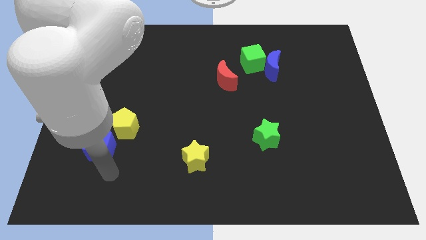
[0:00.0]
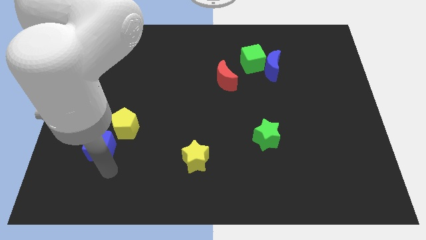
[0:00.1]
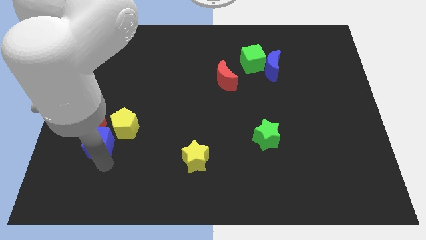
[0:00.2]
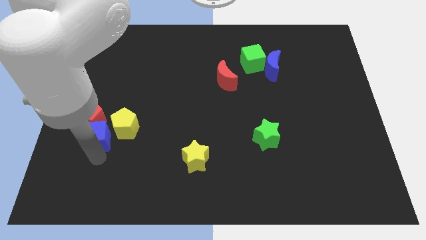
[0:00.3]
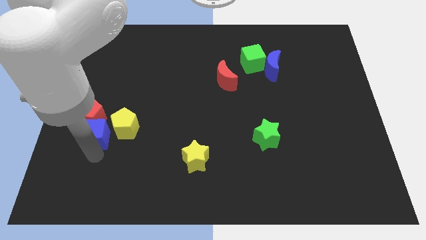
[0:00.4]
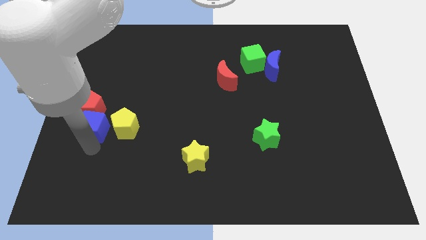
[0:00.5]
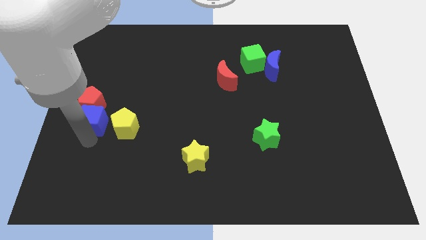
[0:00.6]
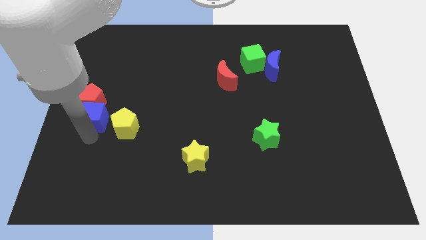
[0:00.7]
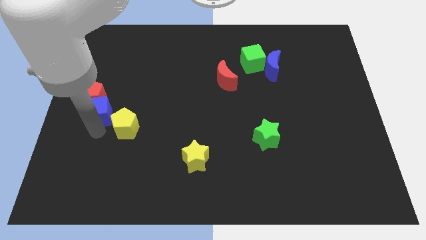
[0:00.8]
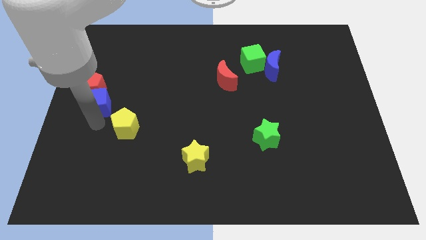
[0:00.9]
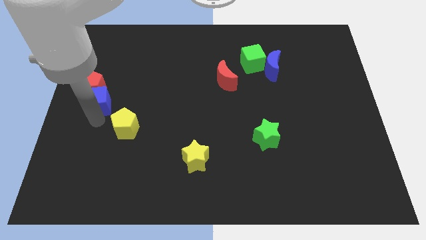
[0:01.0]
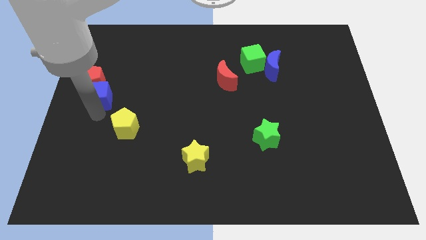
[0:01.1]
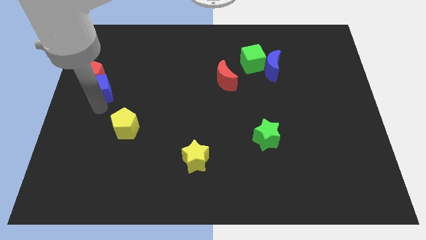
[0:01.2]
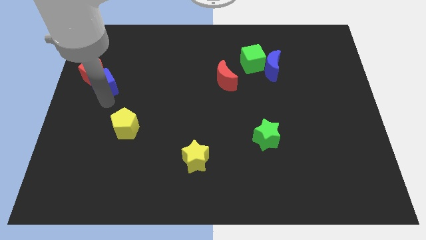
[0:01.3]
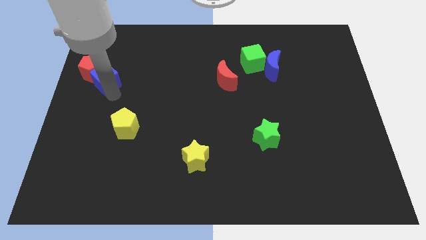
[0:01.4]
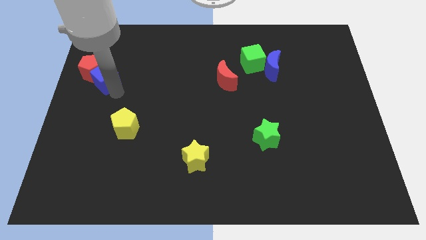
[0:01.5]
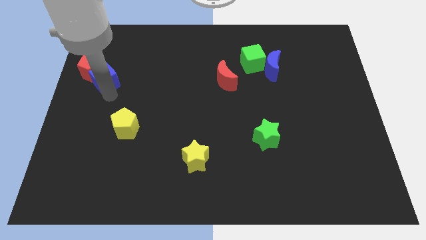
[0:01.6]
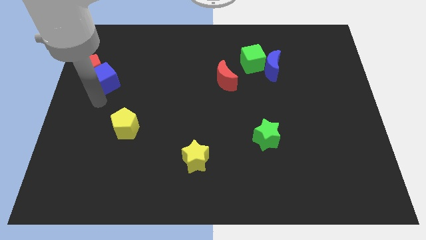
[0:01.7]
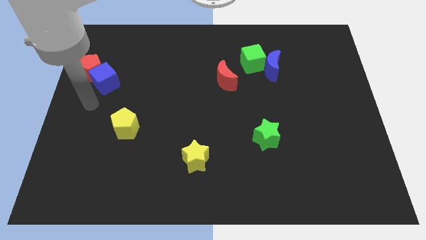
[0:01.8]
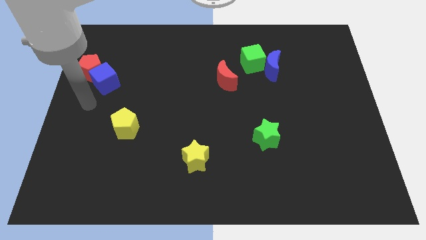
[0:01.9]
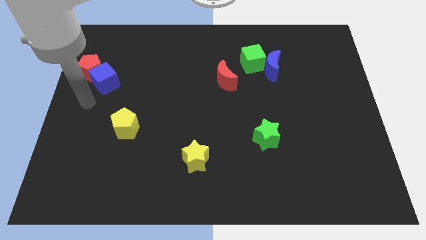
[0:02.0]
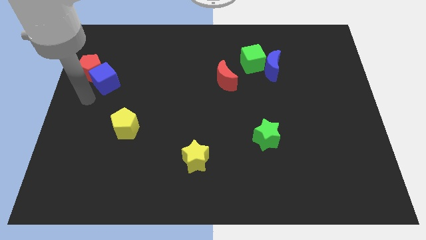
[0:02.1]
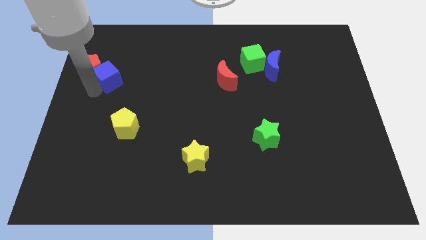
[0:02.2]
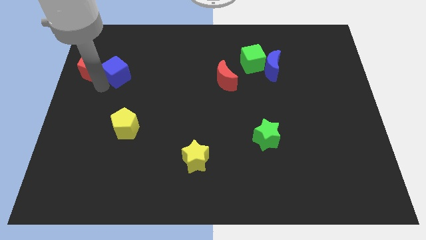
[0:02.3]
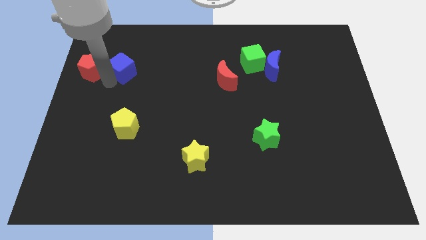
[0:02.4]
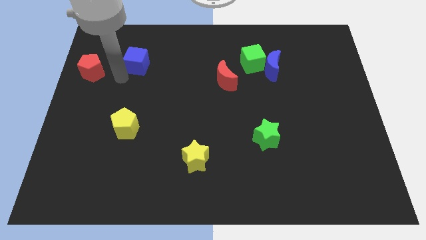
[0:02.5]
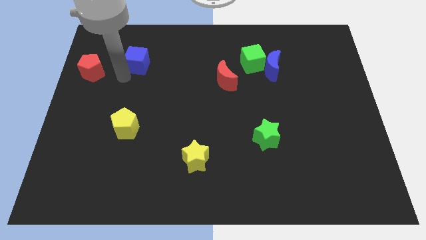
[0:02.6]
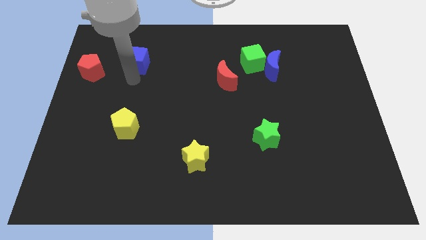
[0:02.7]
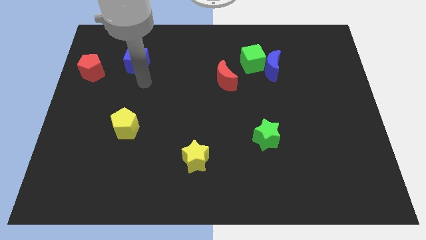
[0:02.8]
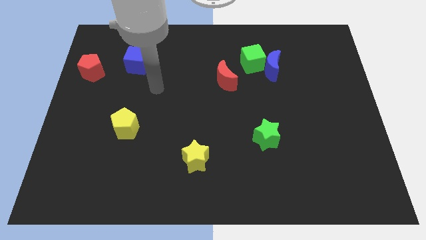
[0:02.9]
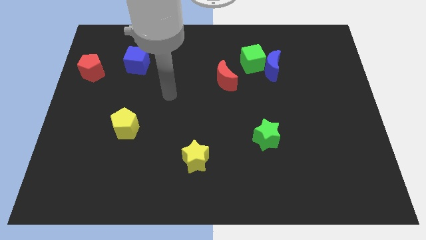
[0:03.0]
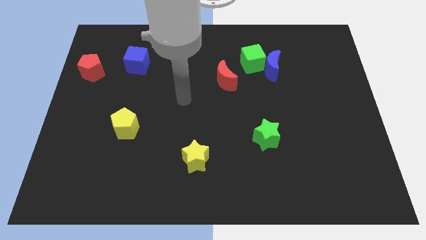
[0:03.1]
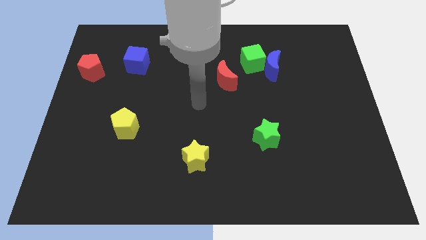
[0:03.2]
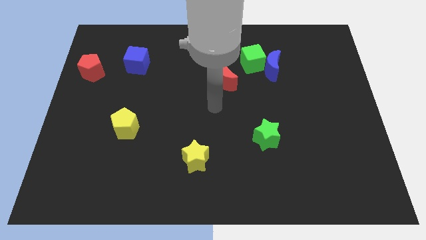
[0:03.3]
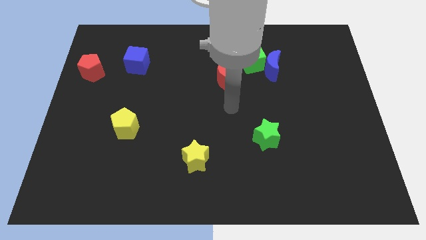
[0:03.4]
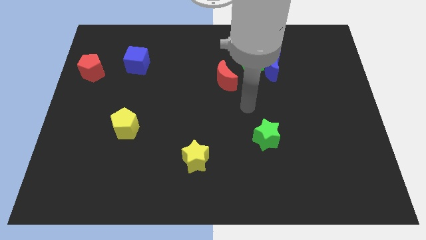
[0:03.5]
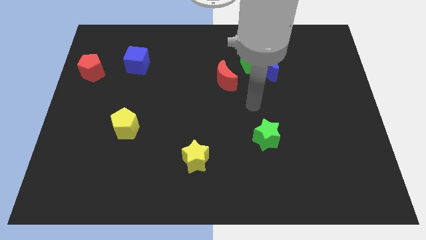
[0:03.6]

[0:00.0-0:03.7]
separate the blue cube from the red pentagon

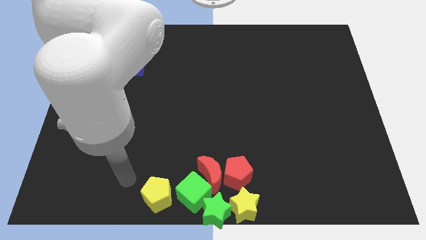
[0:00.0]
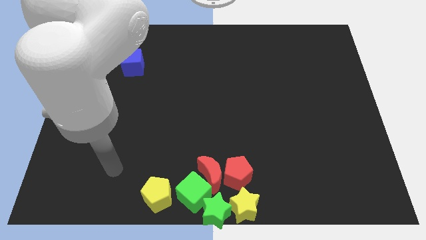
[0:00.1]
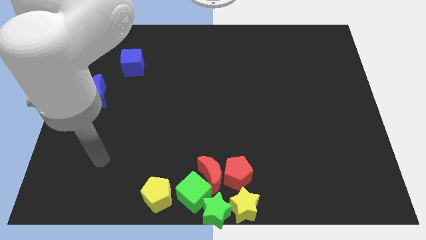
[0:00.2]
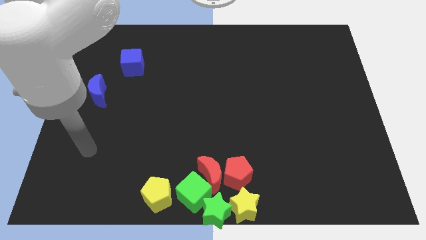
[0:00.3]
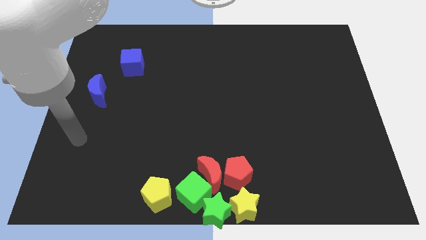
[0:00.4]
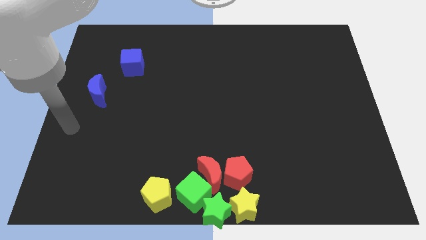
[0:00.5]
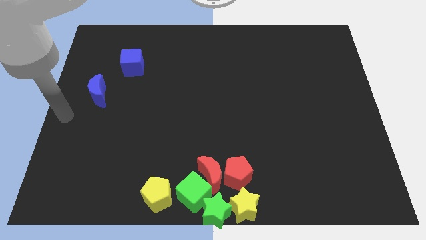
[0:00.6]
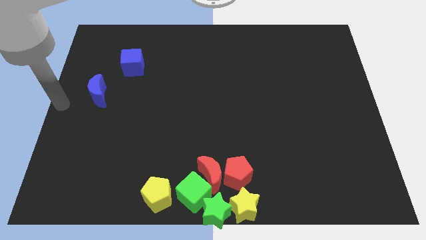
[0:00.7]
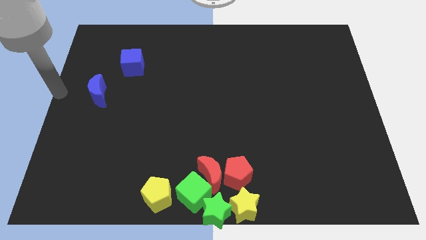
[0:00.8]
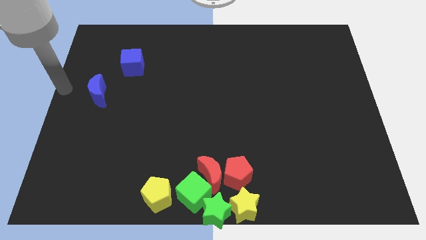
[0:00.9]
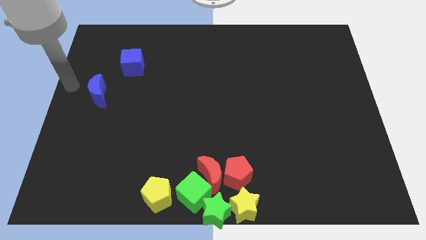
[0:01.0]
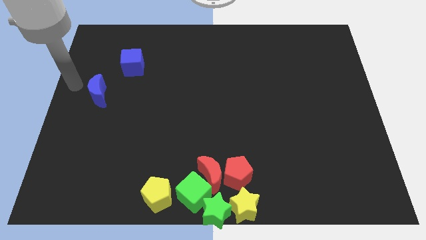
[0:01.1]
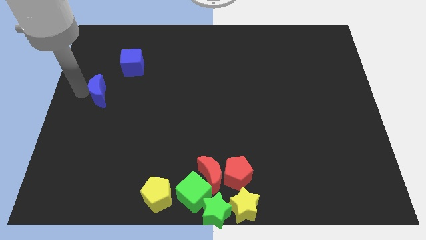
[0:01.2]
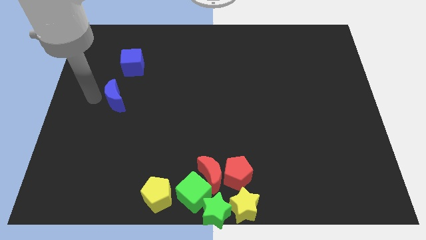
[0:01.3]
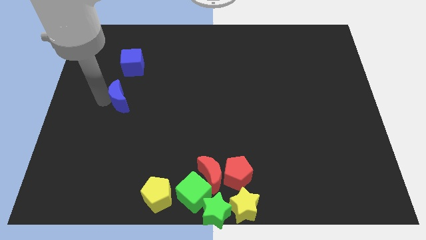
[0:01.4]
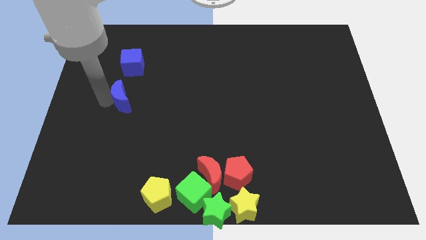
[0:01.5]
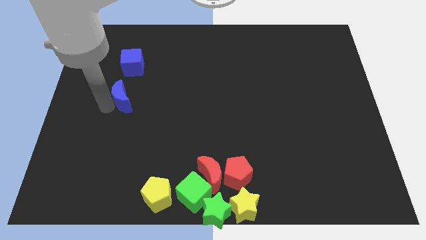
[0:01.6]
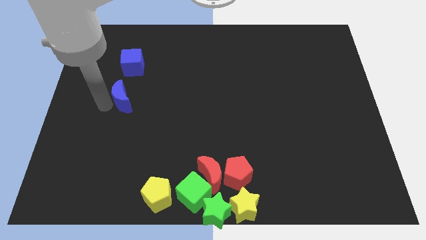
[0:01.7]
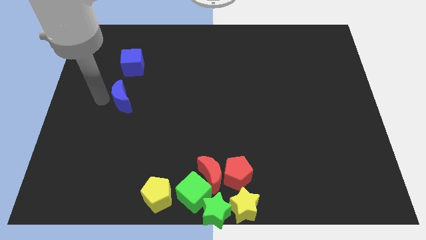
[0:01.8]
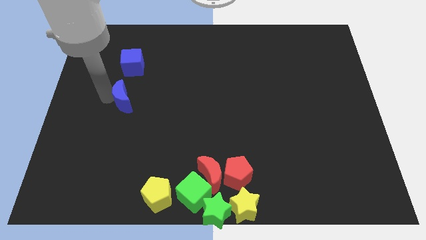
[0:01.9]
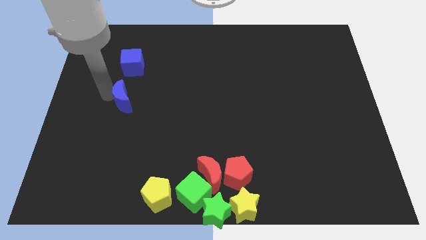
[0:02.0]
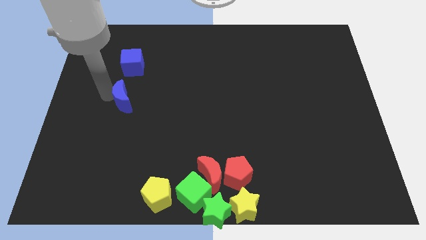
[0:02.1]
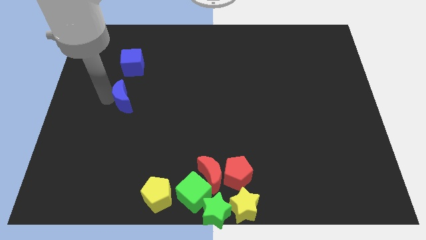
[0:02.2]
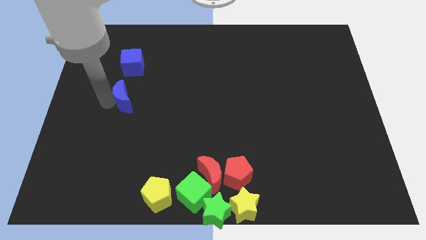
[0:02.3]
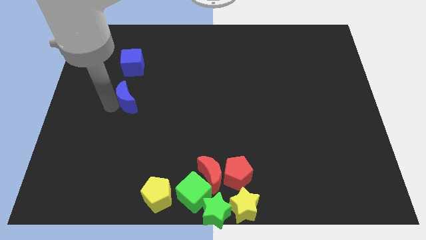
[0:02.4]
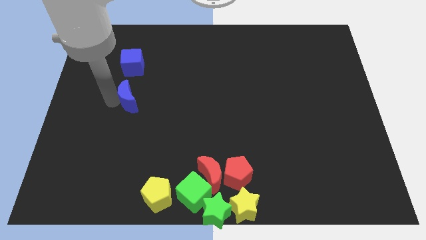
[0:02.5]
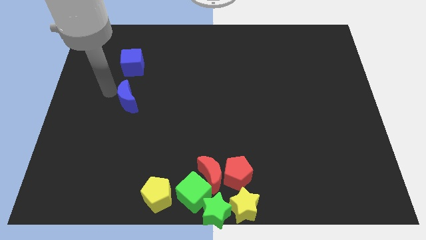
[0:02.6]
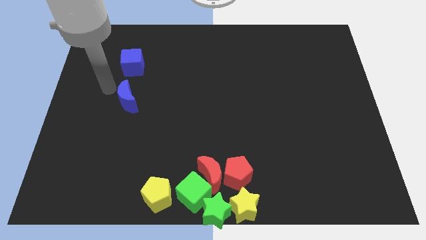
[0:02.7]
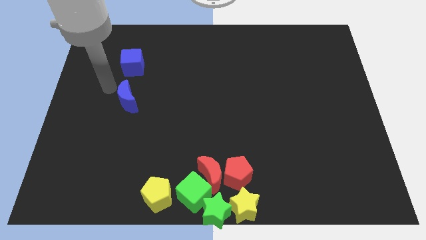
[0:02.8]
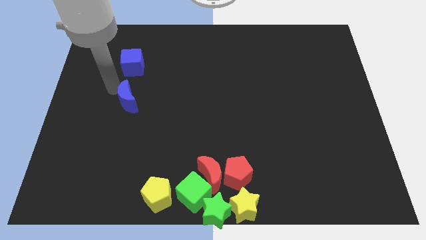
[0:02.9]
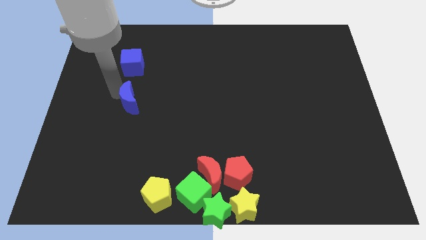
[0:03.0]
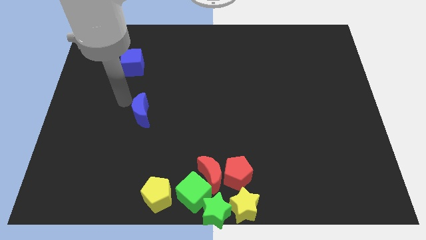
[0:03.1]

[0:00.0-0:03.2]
move the blue crescent to the bottom of the blue cube

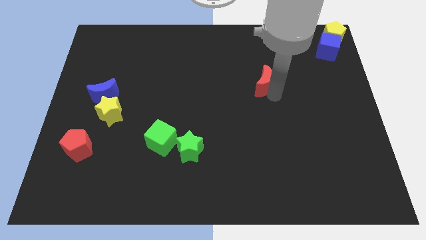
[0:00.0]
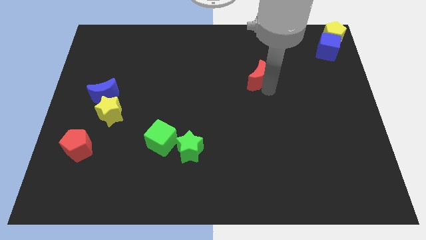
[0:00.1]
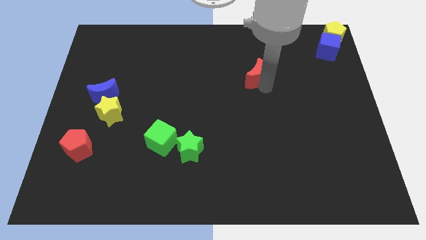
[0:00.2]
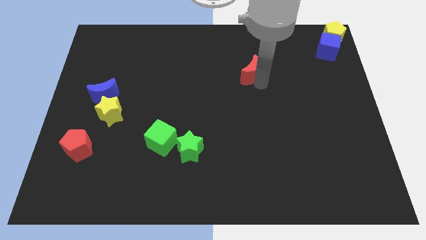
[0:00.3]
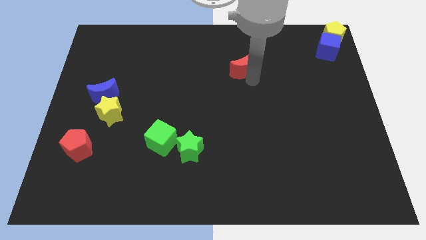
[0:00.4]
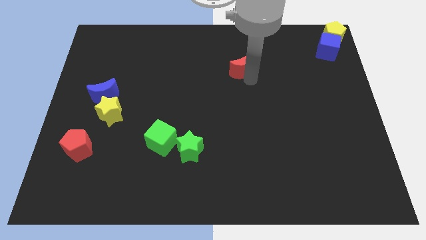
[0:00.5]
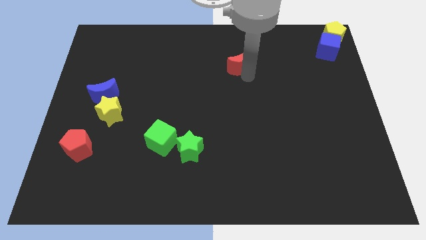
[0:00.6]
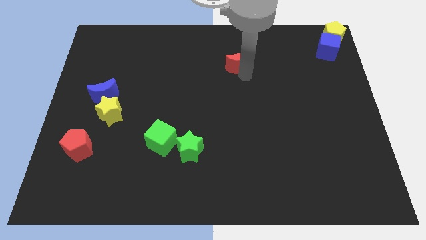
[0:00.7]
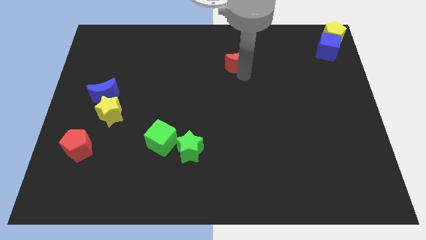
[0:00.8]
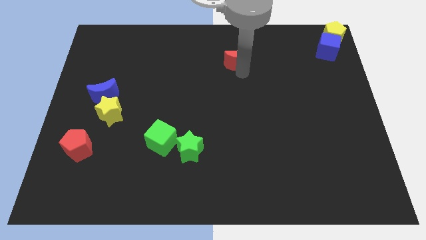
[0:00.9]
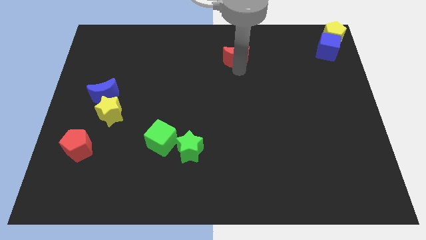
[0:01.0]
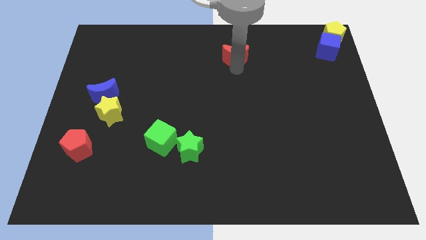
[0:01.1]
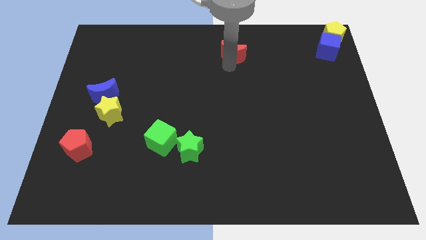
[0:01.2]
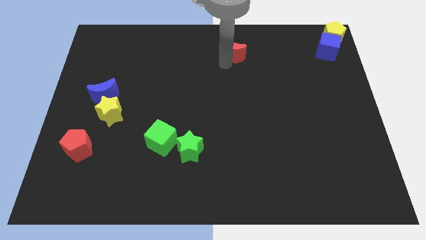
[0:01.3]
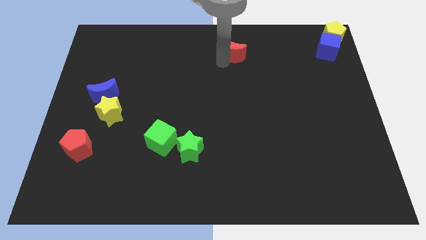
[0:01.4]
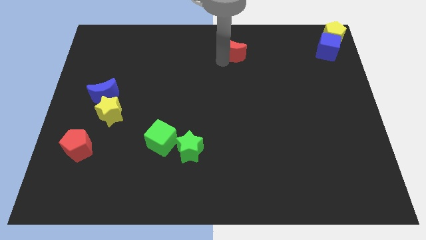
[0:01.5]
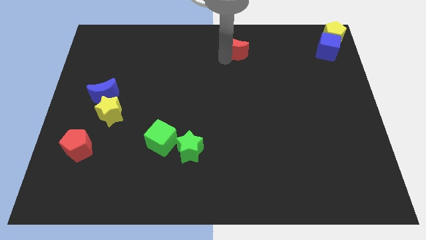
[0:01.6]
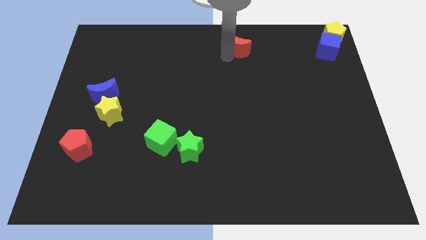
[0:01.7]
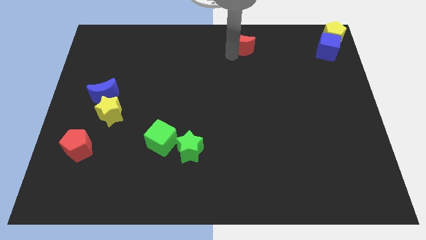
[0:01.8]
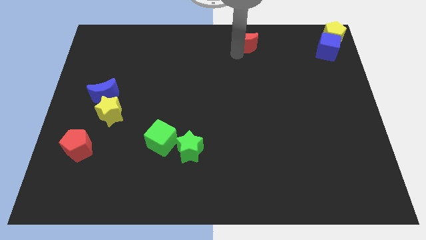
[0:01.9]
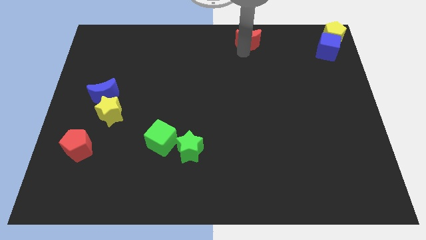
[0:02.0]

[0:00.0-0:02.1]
push red moon towards top center
